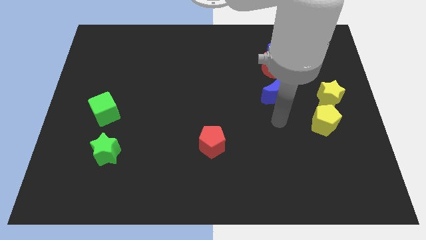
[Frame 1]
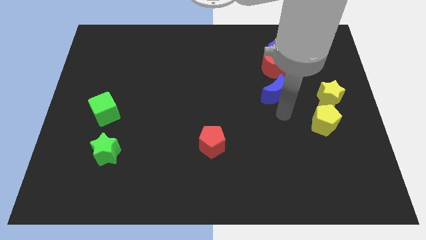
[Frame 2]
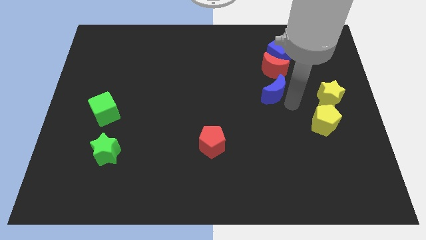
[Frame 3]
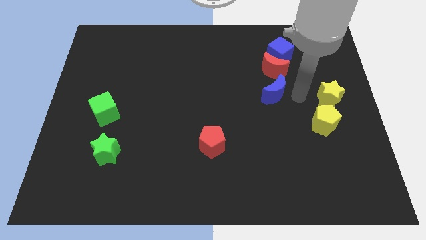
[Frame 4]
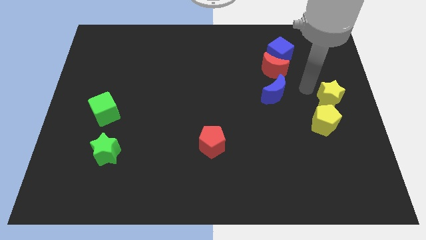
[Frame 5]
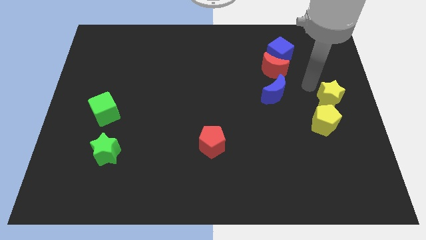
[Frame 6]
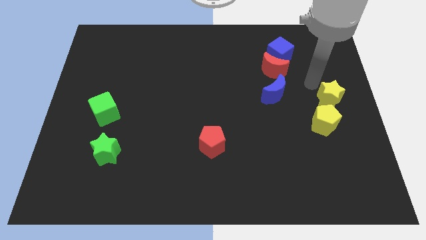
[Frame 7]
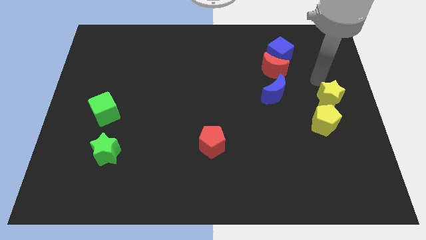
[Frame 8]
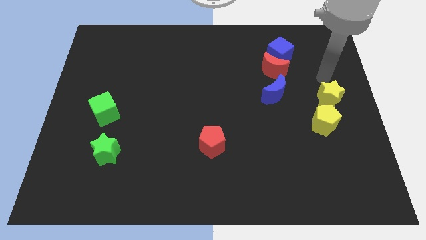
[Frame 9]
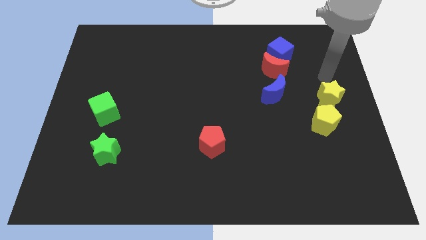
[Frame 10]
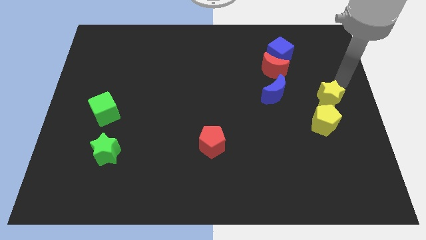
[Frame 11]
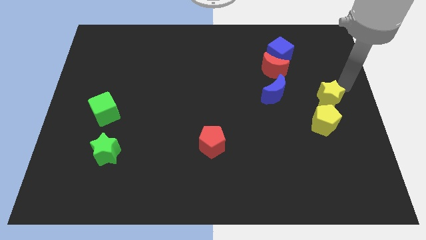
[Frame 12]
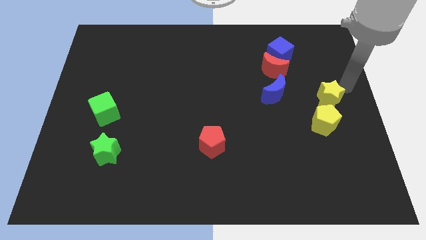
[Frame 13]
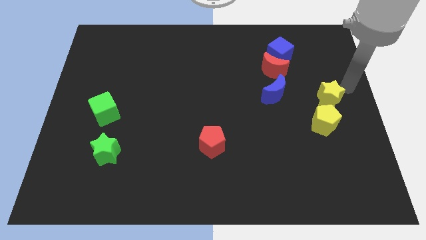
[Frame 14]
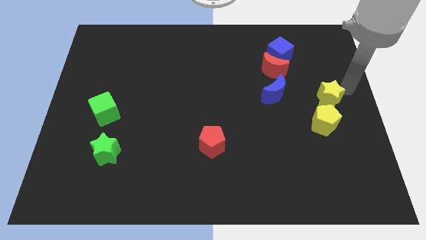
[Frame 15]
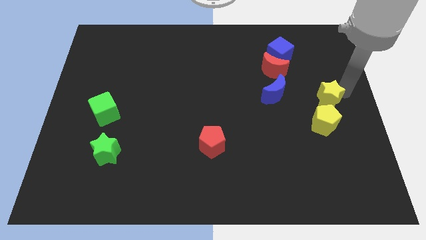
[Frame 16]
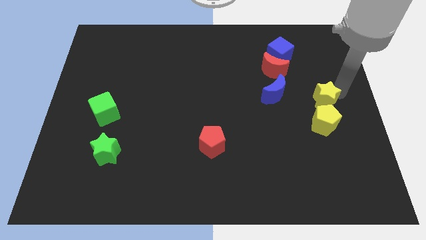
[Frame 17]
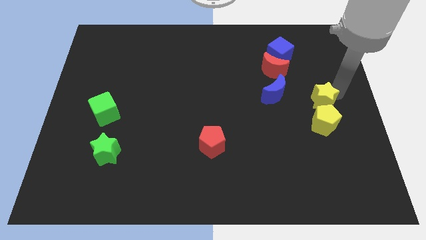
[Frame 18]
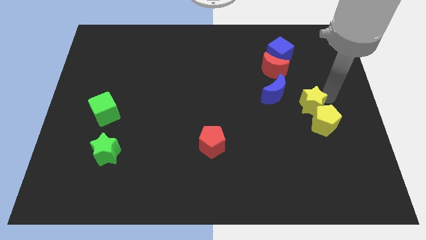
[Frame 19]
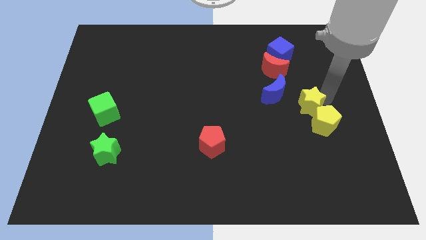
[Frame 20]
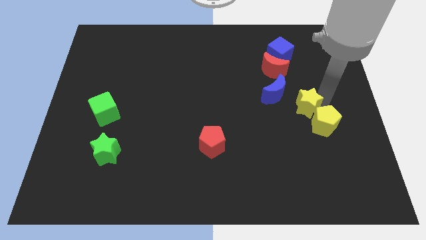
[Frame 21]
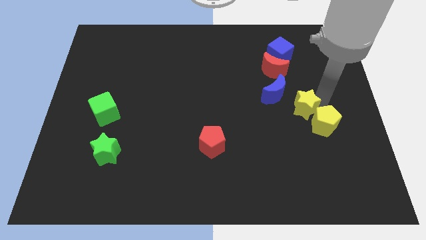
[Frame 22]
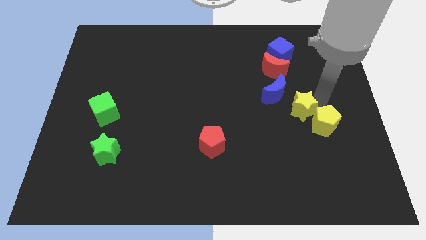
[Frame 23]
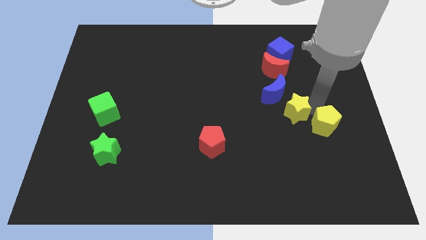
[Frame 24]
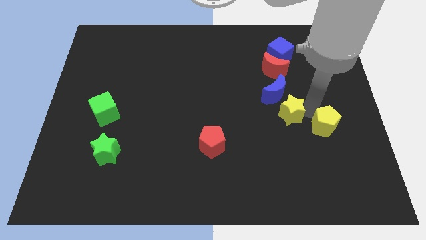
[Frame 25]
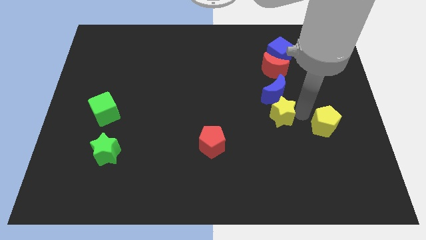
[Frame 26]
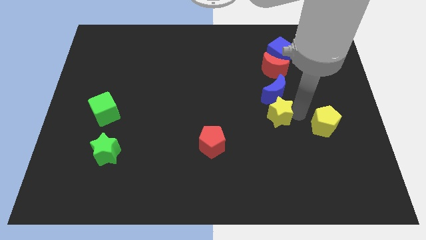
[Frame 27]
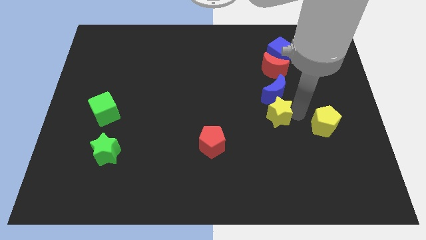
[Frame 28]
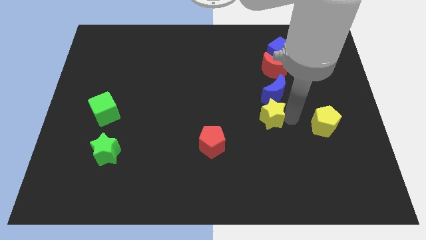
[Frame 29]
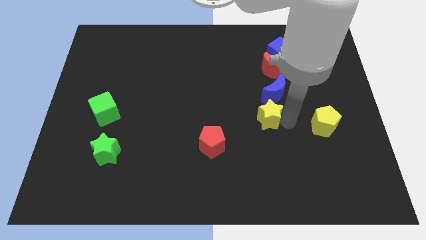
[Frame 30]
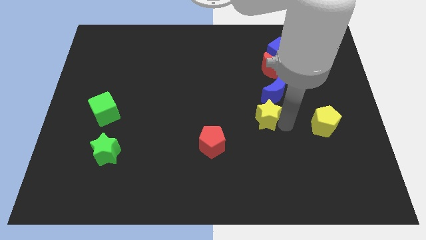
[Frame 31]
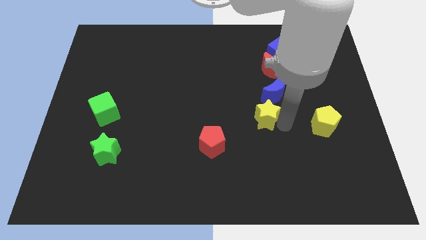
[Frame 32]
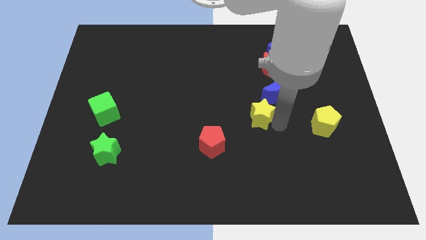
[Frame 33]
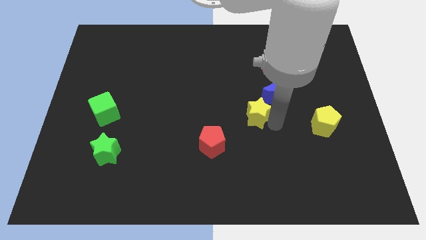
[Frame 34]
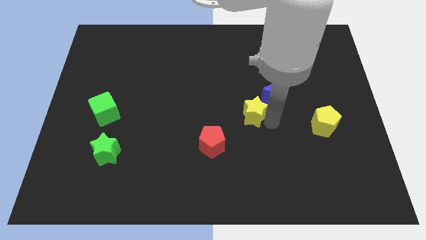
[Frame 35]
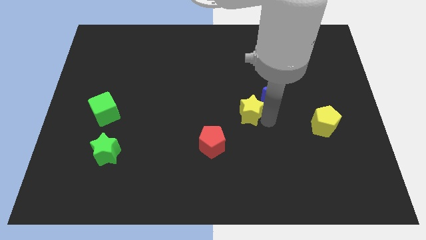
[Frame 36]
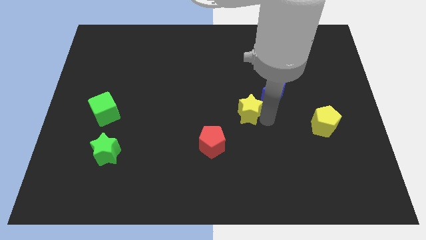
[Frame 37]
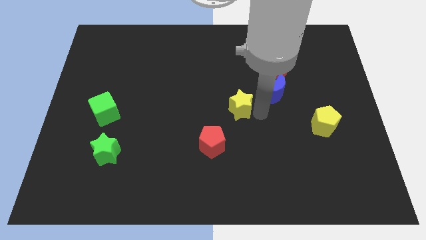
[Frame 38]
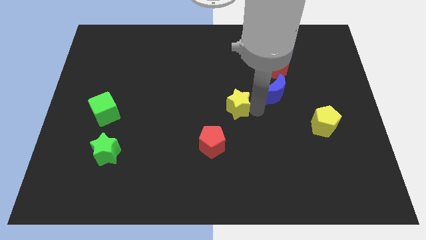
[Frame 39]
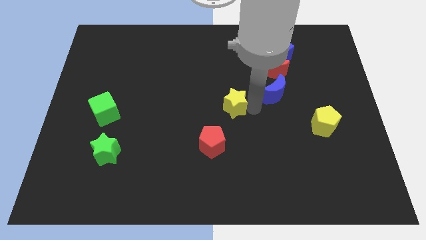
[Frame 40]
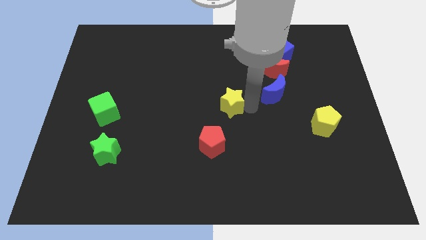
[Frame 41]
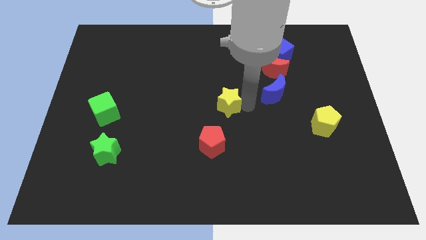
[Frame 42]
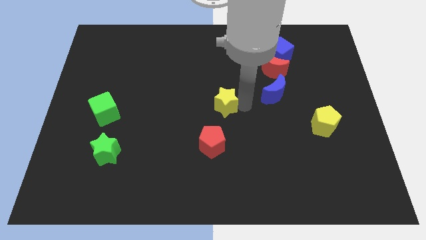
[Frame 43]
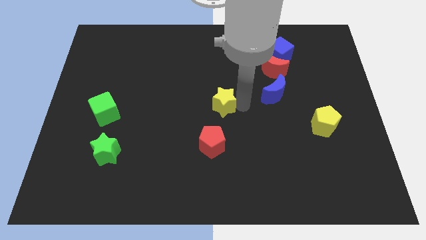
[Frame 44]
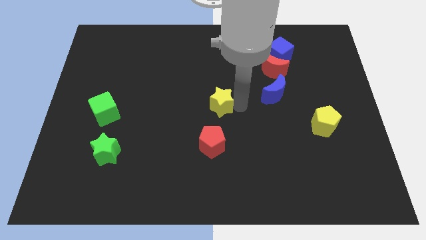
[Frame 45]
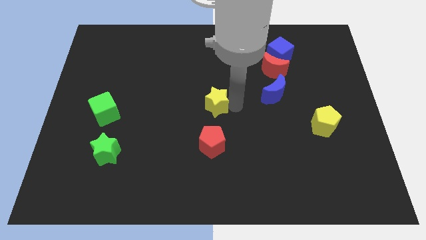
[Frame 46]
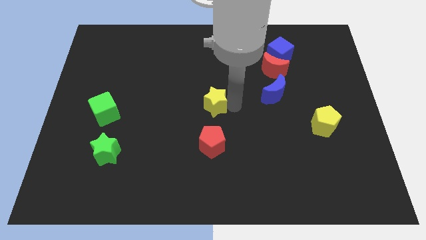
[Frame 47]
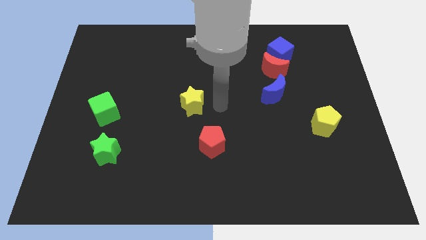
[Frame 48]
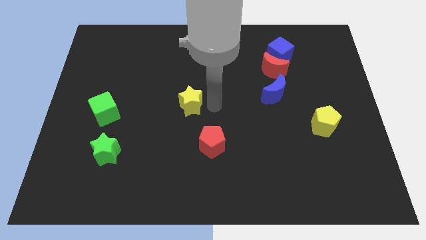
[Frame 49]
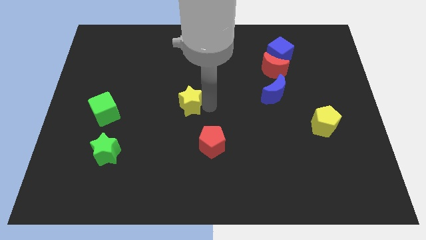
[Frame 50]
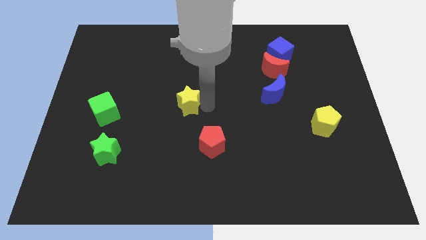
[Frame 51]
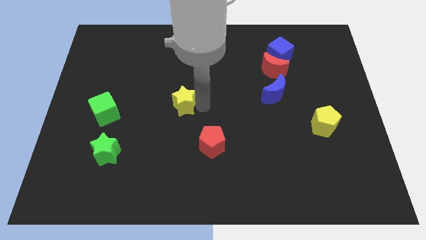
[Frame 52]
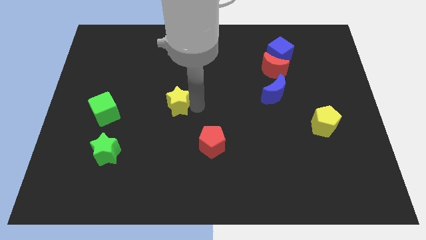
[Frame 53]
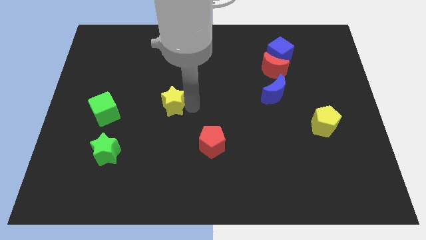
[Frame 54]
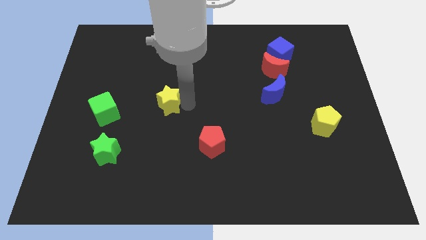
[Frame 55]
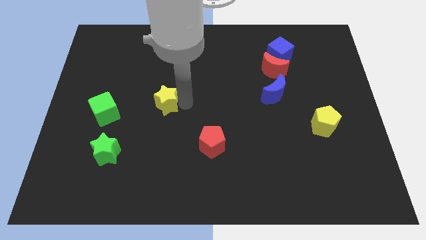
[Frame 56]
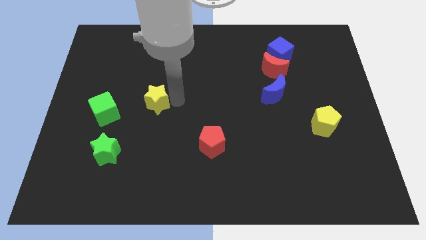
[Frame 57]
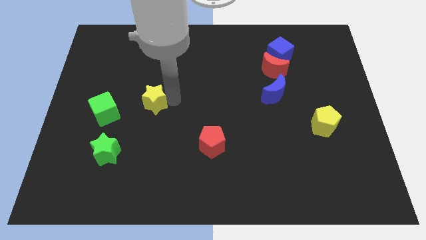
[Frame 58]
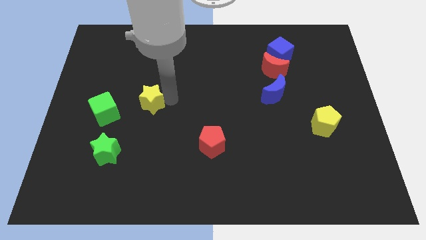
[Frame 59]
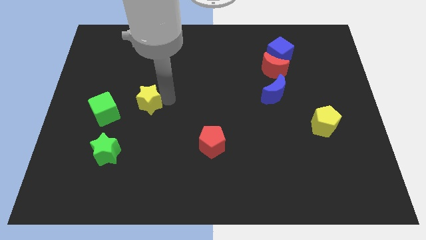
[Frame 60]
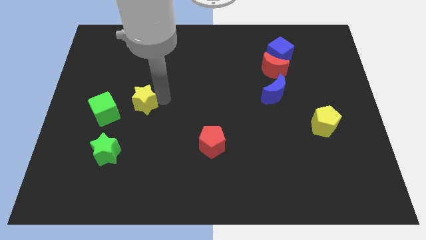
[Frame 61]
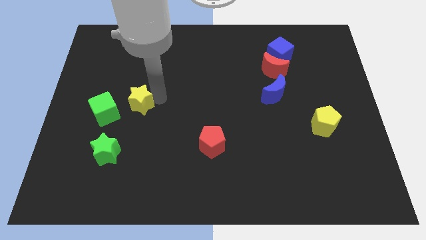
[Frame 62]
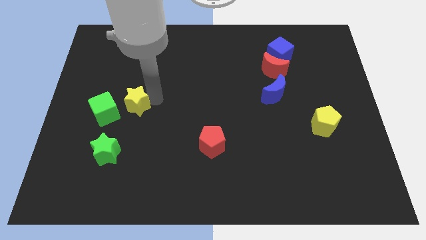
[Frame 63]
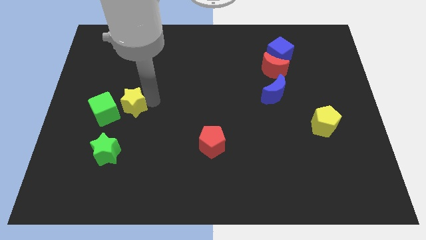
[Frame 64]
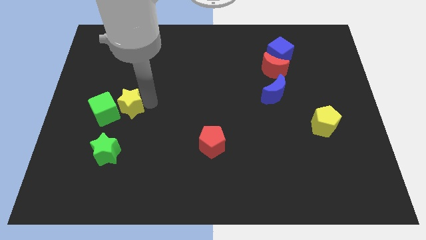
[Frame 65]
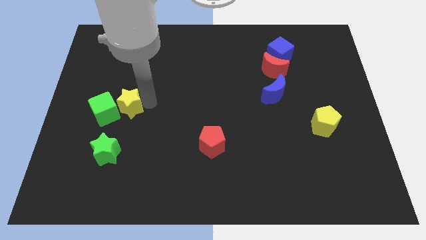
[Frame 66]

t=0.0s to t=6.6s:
move the yellow star close to the green cube

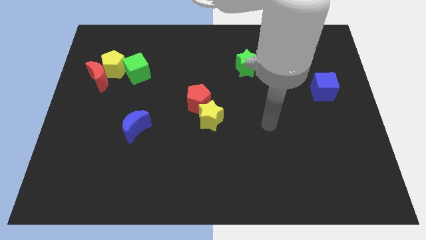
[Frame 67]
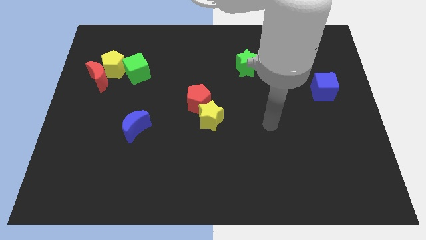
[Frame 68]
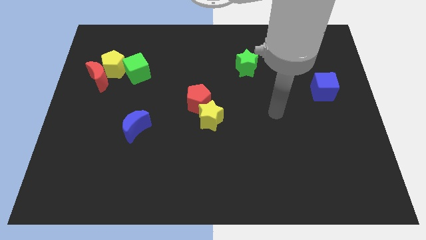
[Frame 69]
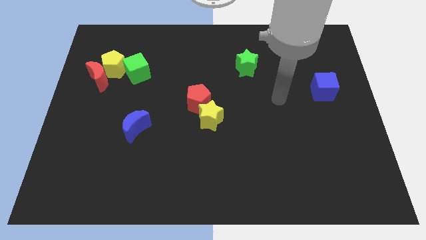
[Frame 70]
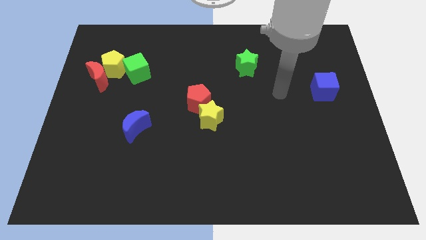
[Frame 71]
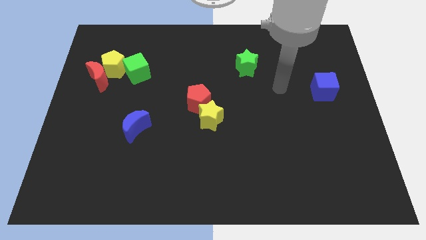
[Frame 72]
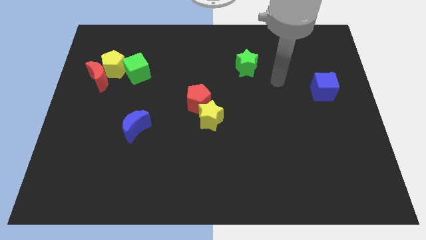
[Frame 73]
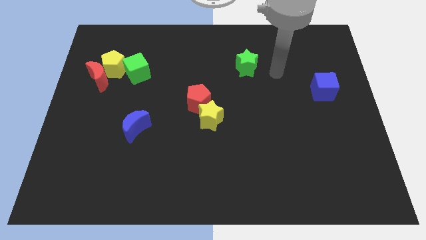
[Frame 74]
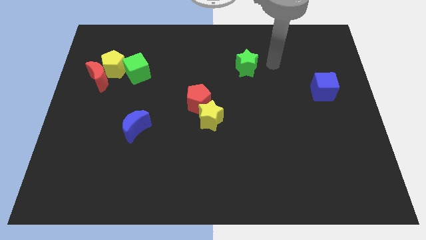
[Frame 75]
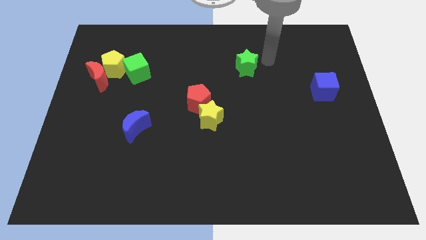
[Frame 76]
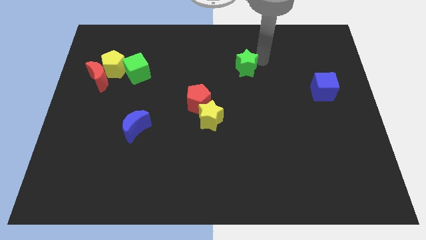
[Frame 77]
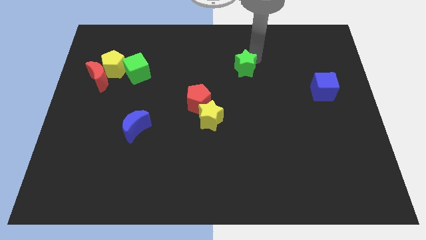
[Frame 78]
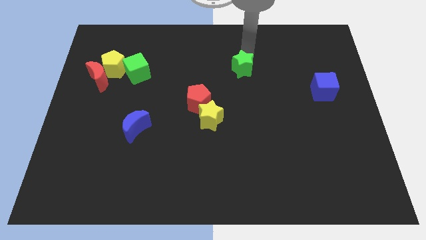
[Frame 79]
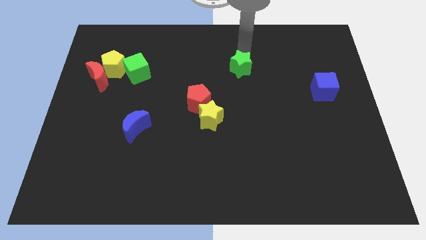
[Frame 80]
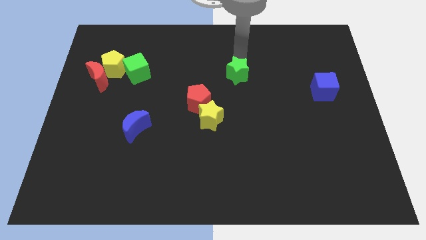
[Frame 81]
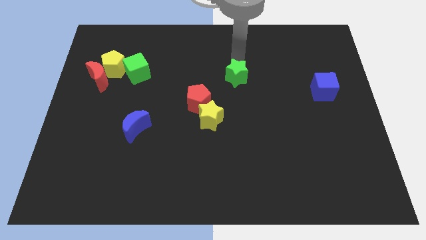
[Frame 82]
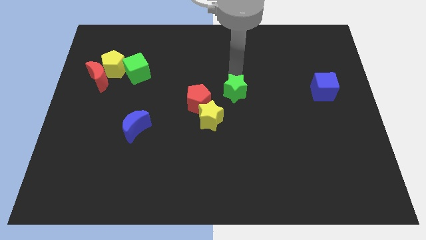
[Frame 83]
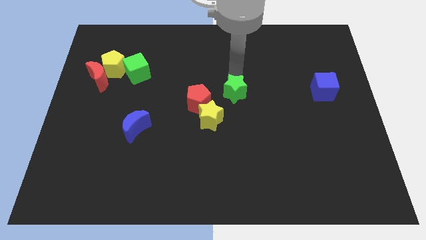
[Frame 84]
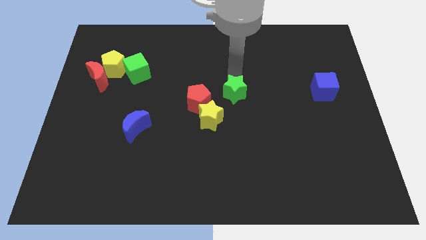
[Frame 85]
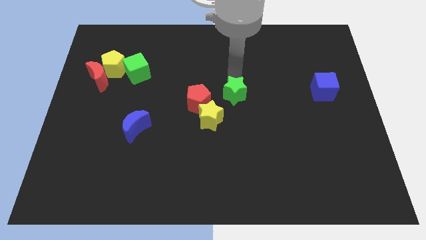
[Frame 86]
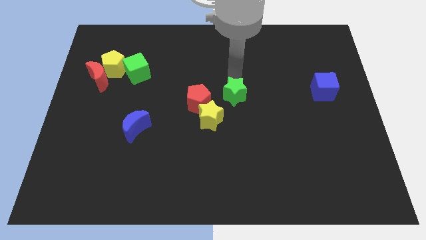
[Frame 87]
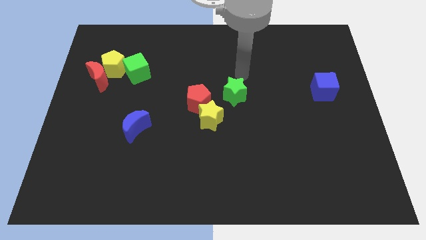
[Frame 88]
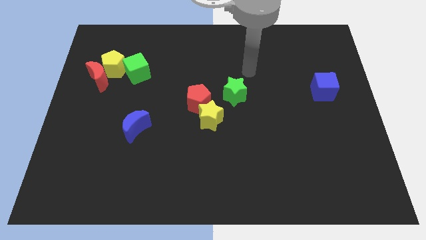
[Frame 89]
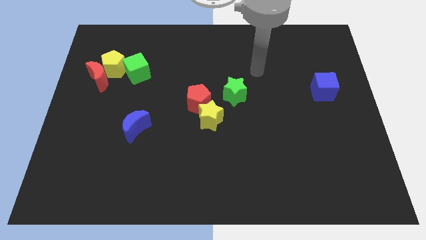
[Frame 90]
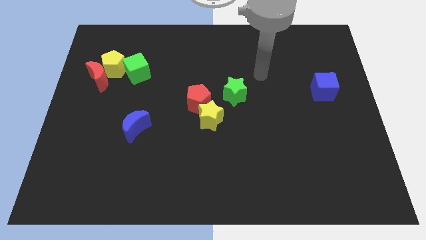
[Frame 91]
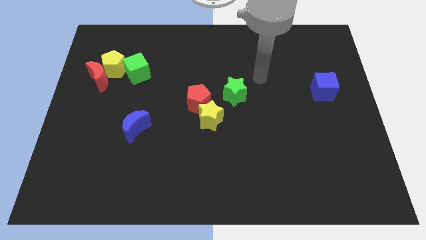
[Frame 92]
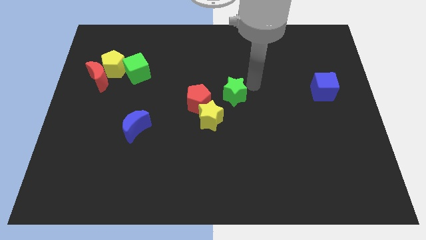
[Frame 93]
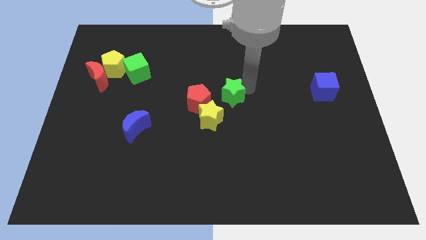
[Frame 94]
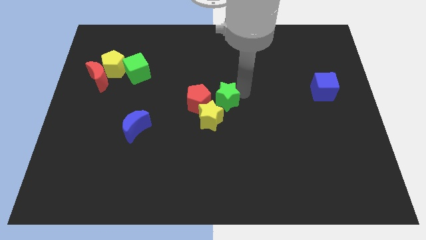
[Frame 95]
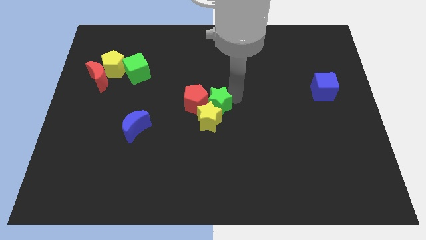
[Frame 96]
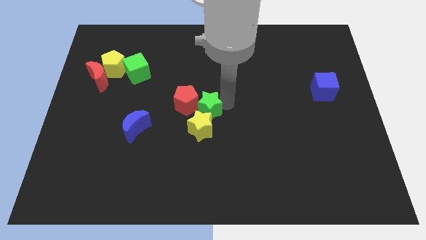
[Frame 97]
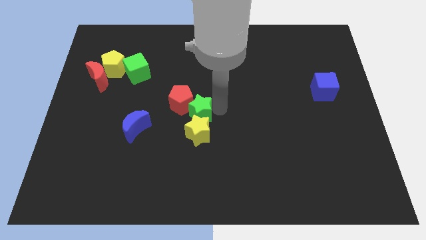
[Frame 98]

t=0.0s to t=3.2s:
put the green star to the yellow star
